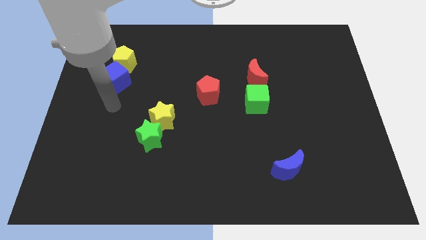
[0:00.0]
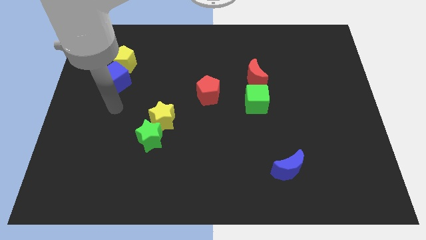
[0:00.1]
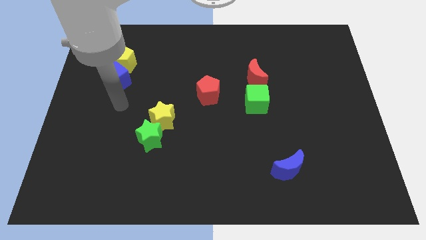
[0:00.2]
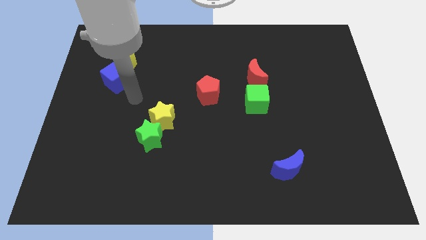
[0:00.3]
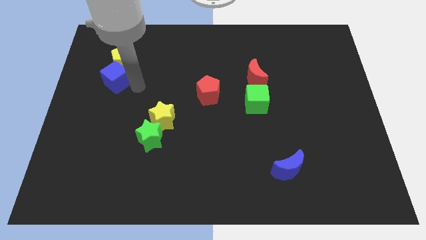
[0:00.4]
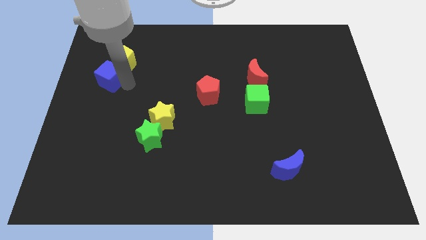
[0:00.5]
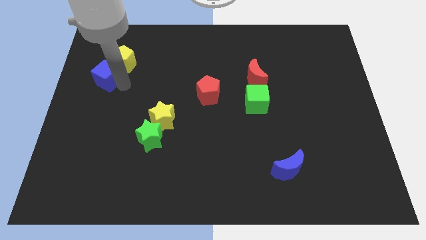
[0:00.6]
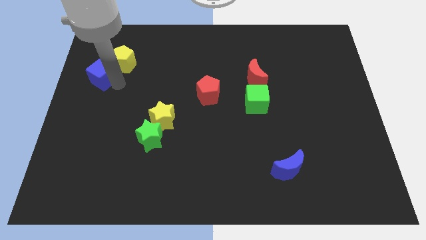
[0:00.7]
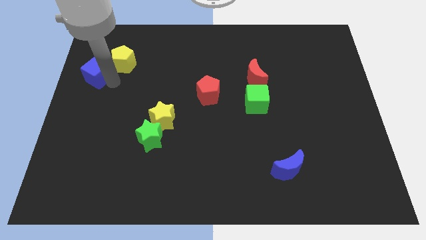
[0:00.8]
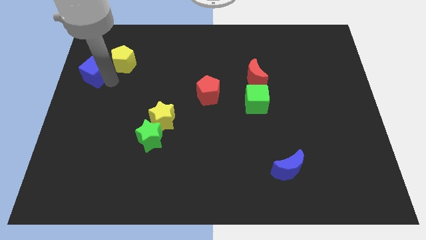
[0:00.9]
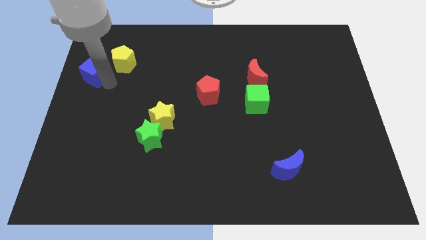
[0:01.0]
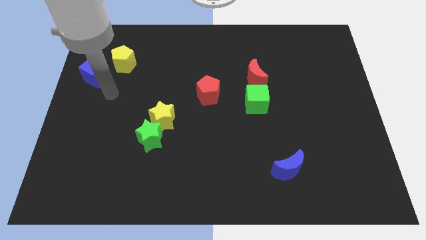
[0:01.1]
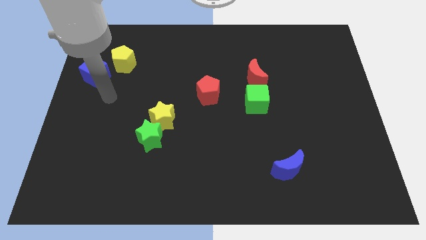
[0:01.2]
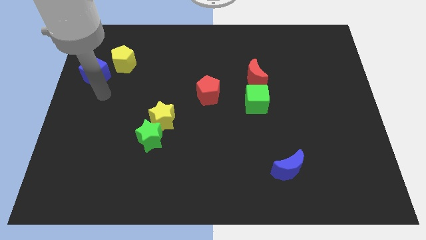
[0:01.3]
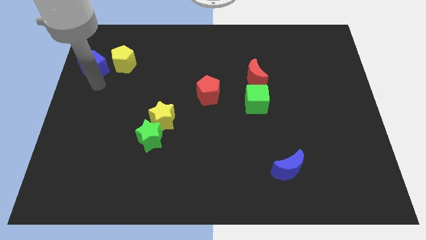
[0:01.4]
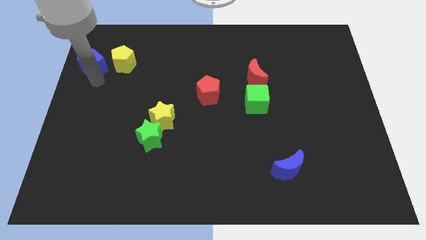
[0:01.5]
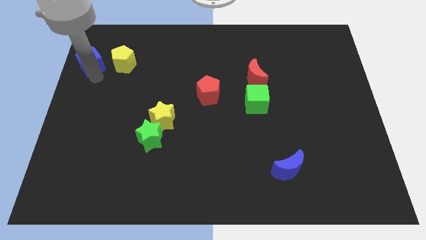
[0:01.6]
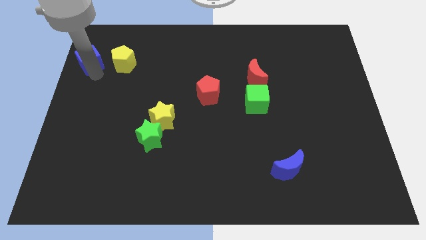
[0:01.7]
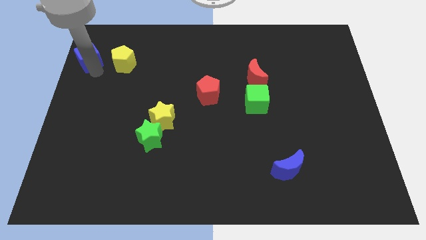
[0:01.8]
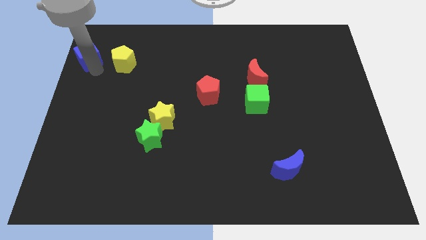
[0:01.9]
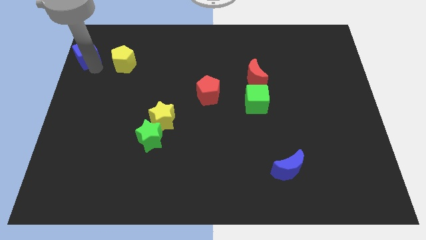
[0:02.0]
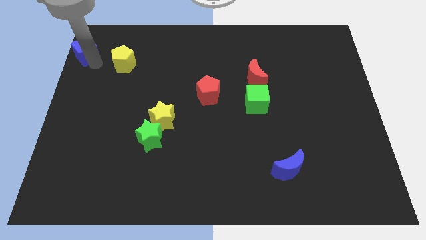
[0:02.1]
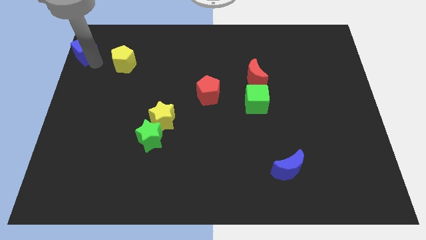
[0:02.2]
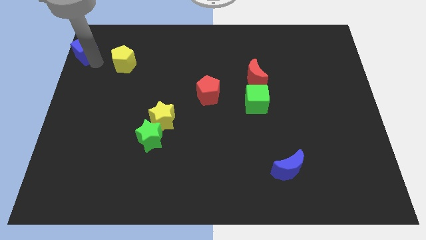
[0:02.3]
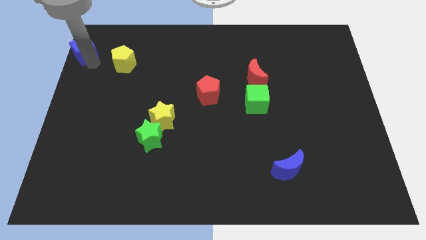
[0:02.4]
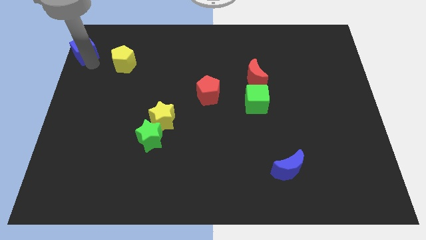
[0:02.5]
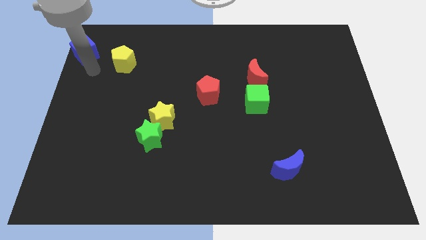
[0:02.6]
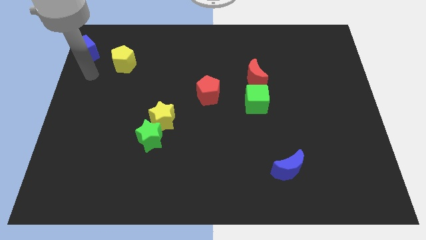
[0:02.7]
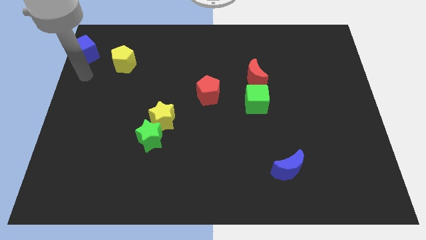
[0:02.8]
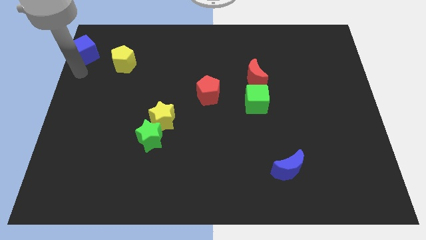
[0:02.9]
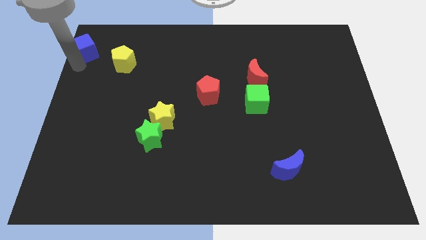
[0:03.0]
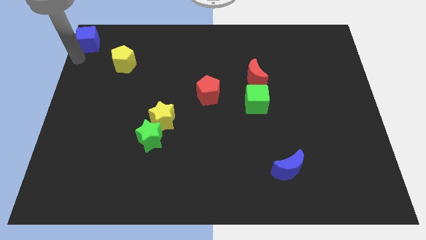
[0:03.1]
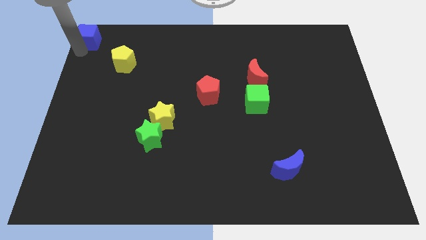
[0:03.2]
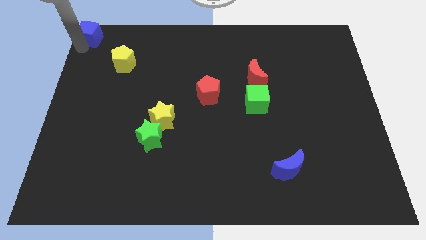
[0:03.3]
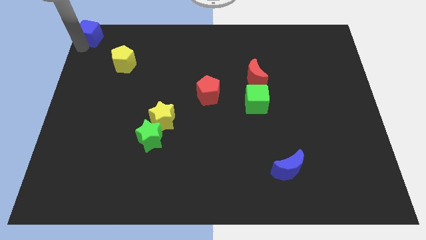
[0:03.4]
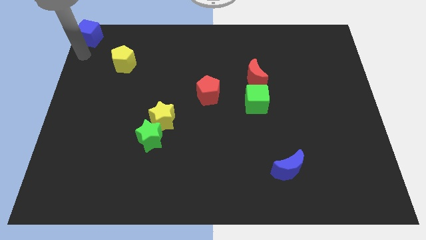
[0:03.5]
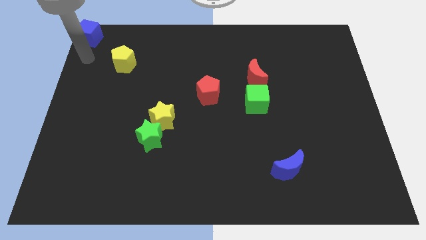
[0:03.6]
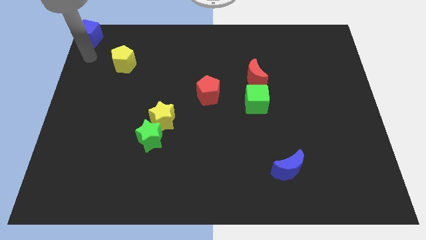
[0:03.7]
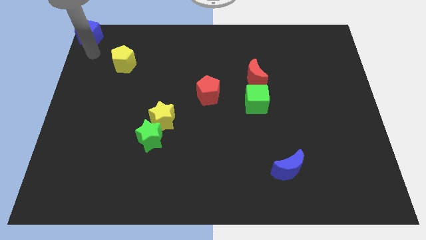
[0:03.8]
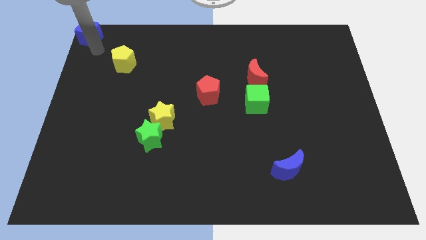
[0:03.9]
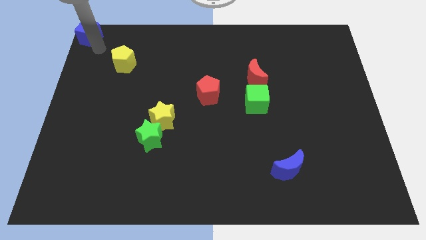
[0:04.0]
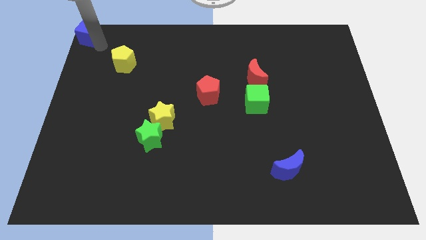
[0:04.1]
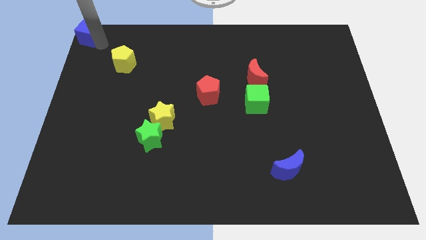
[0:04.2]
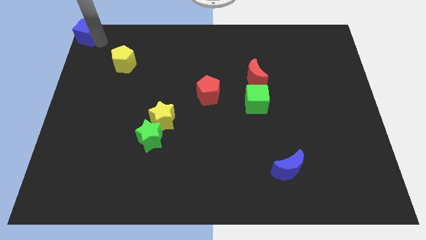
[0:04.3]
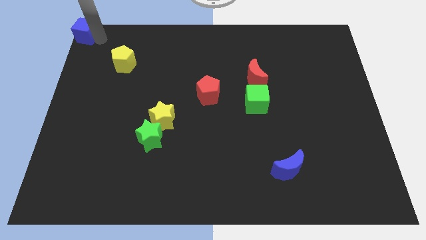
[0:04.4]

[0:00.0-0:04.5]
push the blue cube to the top left

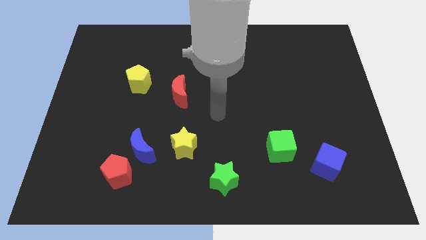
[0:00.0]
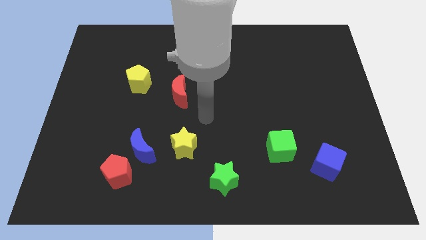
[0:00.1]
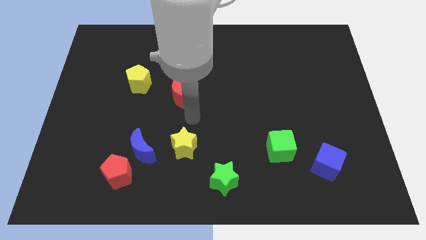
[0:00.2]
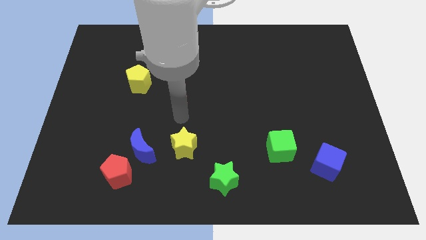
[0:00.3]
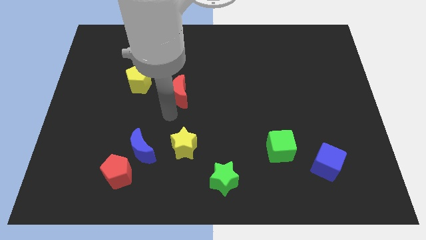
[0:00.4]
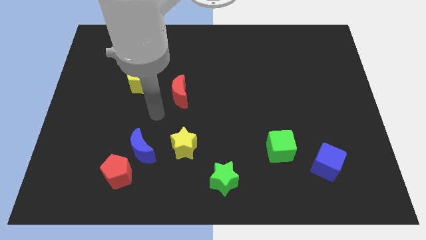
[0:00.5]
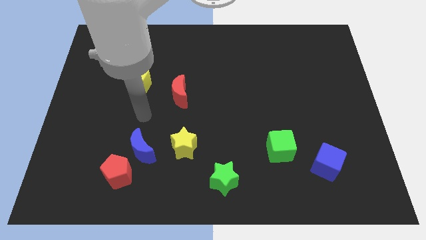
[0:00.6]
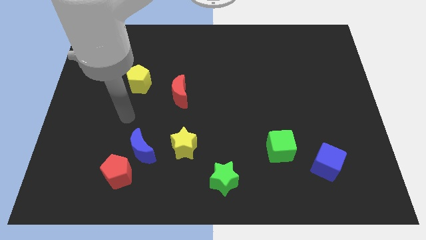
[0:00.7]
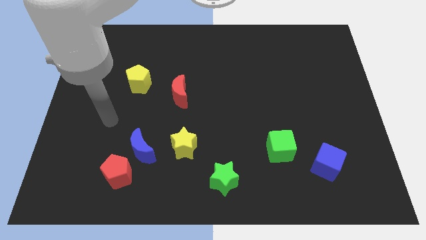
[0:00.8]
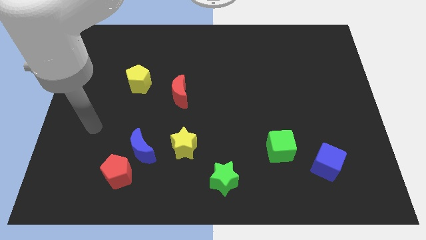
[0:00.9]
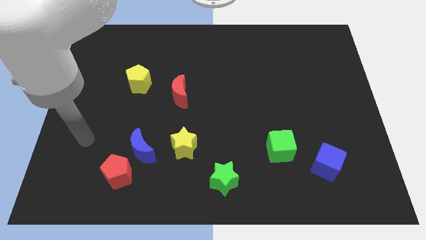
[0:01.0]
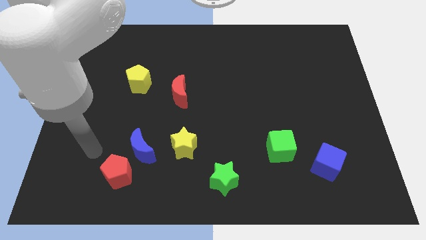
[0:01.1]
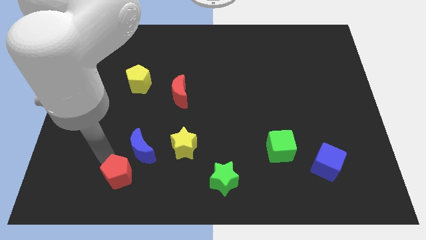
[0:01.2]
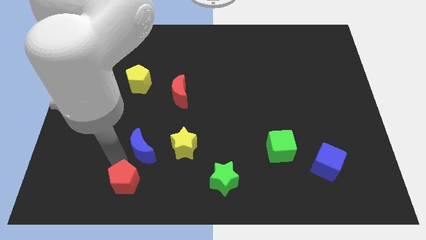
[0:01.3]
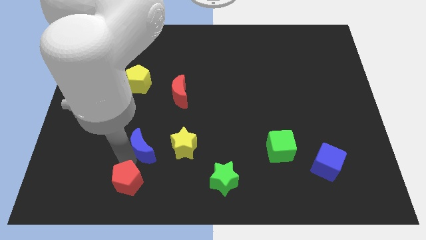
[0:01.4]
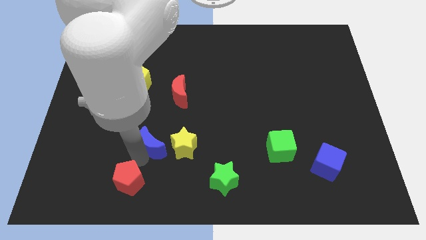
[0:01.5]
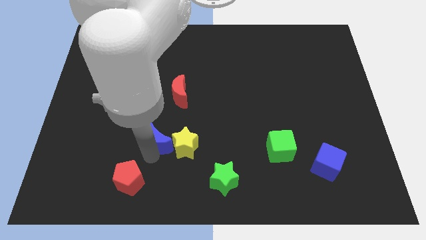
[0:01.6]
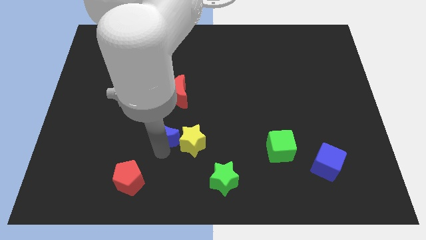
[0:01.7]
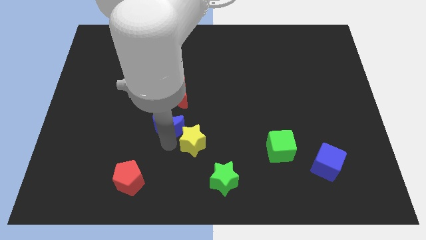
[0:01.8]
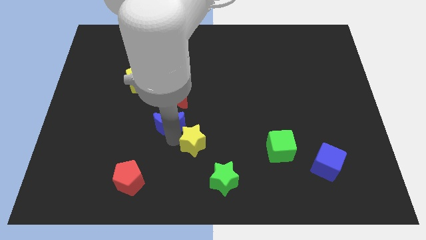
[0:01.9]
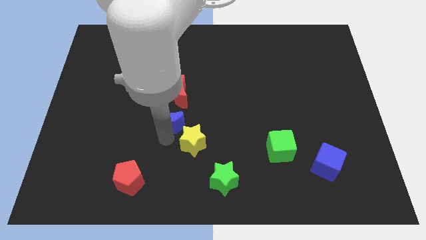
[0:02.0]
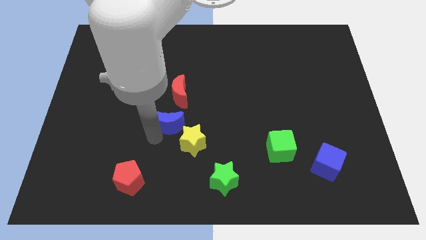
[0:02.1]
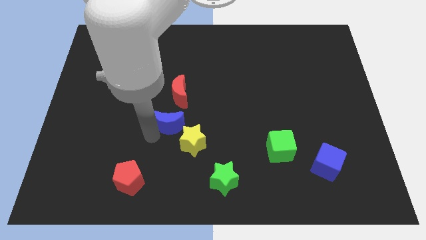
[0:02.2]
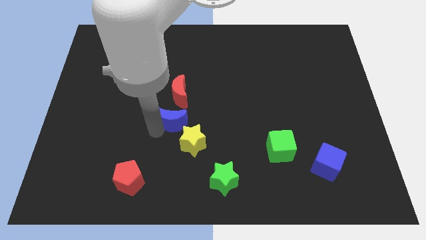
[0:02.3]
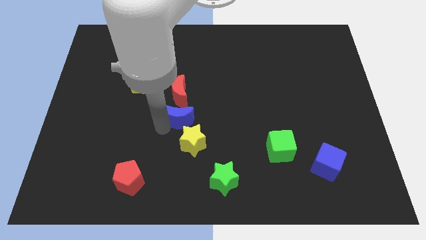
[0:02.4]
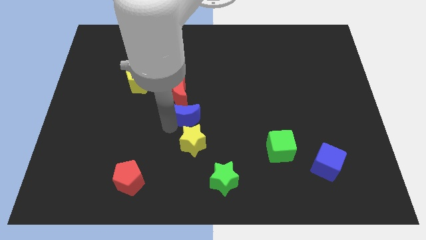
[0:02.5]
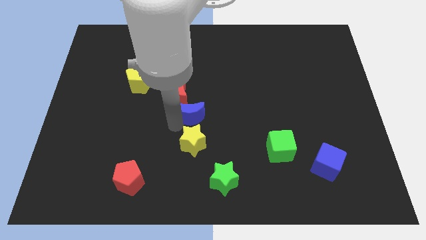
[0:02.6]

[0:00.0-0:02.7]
separate blue crescent from red pentagon

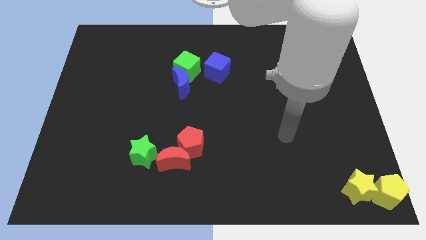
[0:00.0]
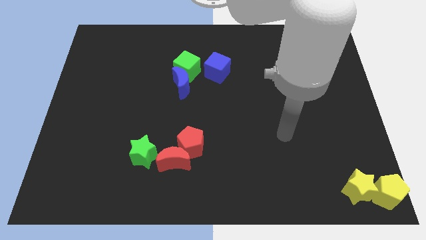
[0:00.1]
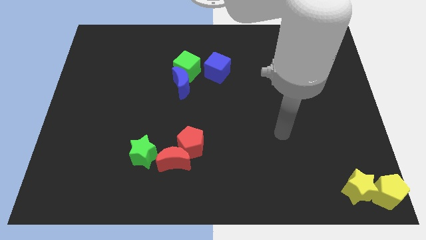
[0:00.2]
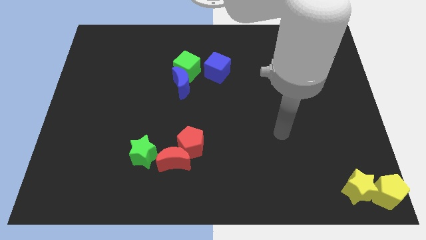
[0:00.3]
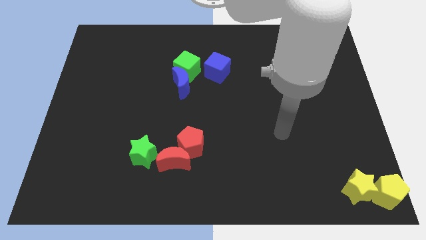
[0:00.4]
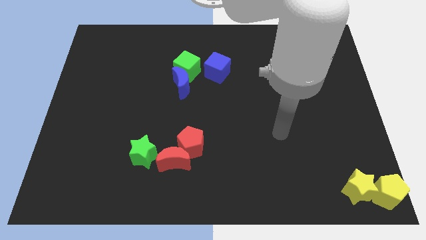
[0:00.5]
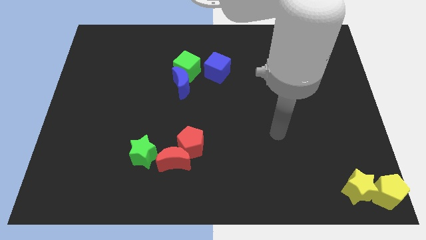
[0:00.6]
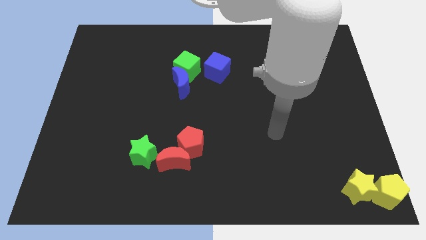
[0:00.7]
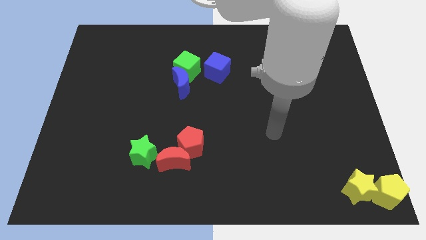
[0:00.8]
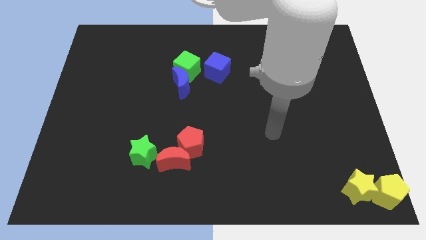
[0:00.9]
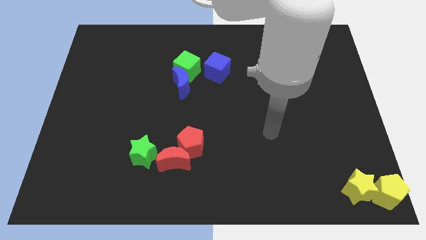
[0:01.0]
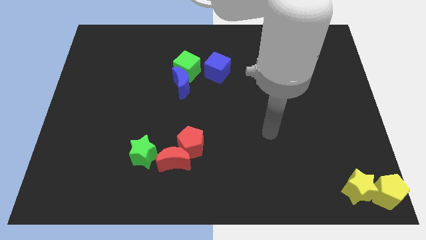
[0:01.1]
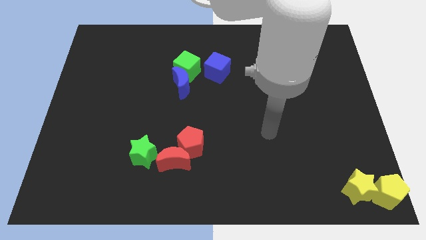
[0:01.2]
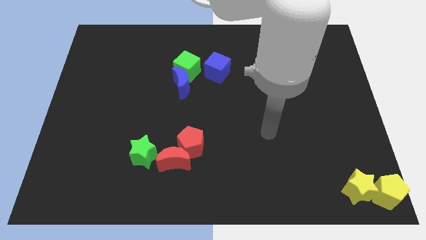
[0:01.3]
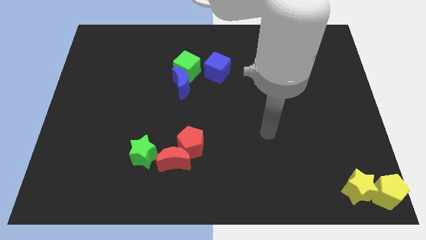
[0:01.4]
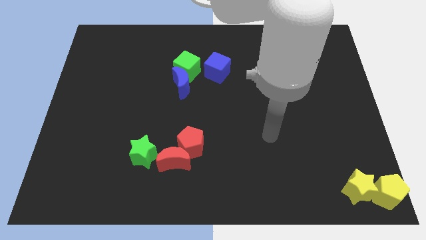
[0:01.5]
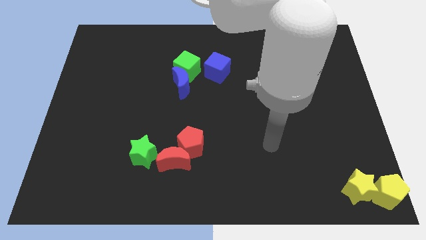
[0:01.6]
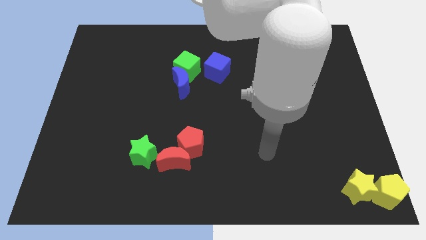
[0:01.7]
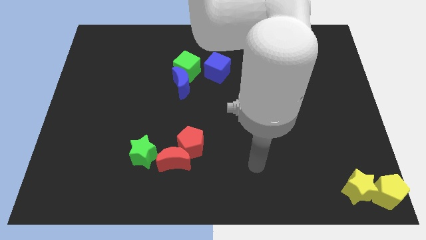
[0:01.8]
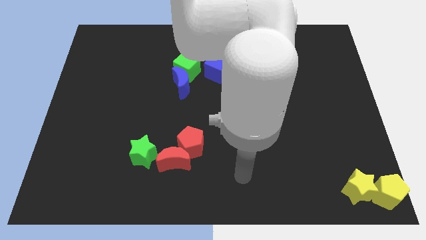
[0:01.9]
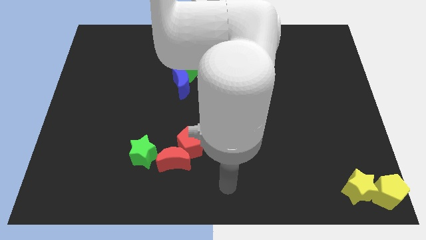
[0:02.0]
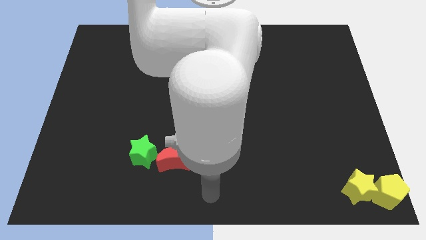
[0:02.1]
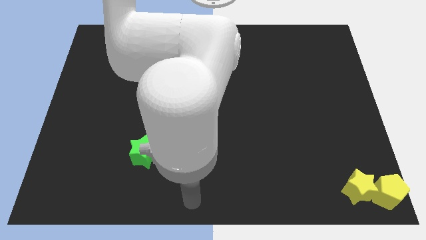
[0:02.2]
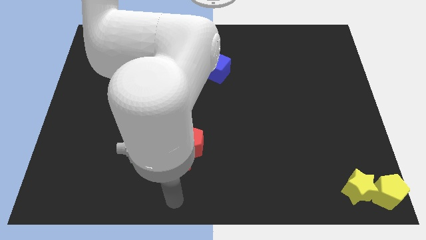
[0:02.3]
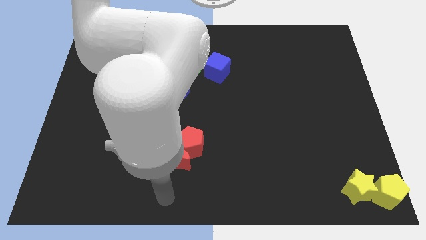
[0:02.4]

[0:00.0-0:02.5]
point the arm below the red moon
